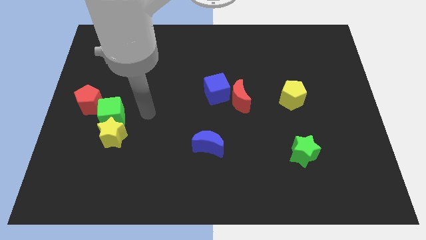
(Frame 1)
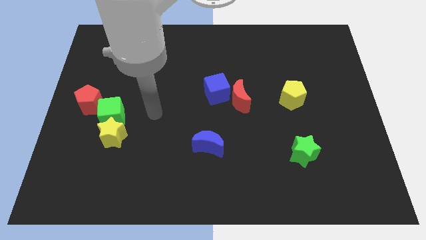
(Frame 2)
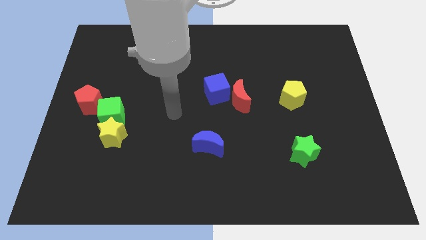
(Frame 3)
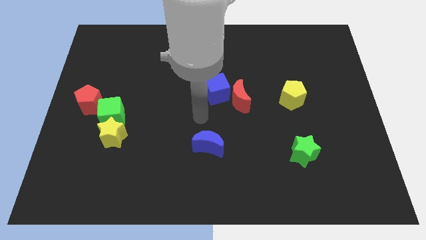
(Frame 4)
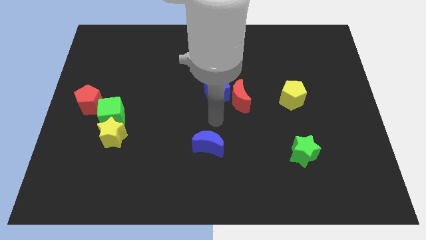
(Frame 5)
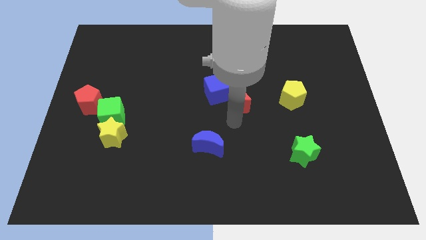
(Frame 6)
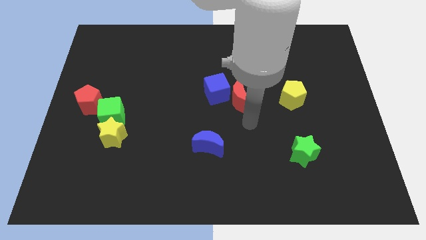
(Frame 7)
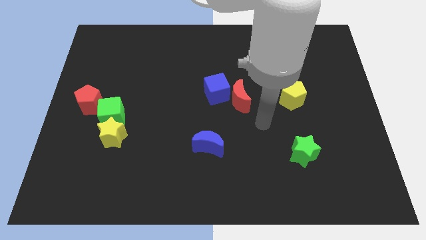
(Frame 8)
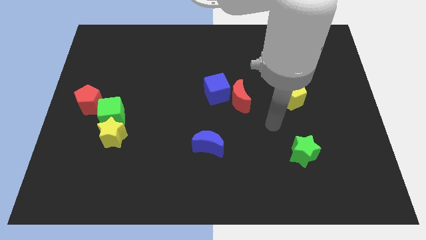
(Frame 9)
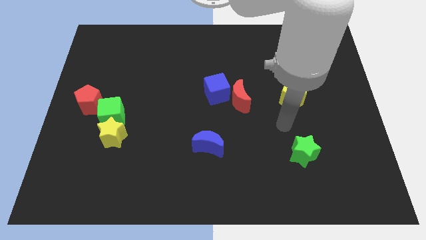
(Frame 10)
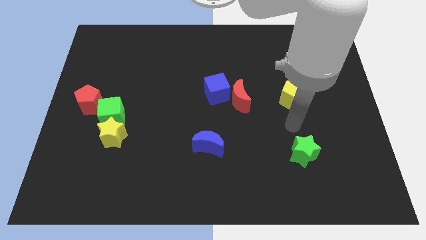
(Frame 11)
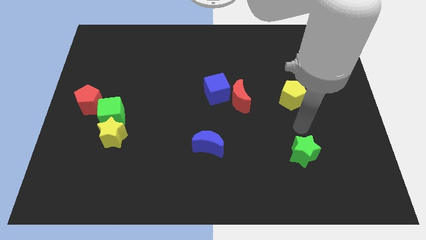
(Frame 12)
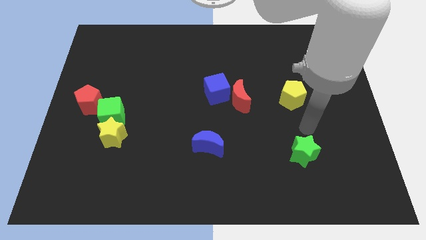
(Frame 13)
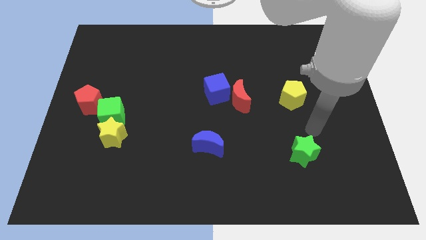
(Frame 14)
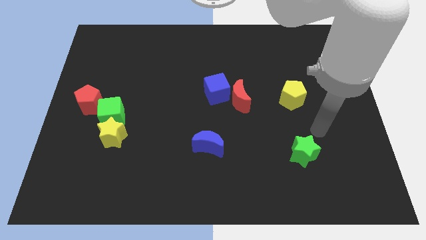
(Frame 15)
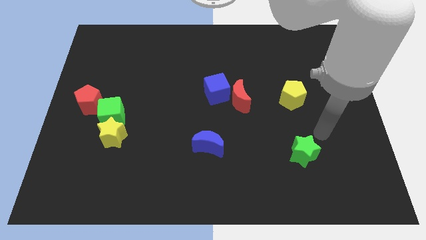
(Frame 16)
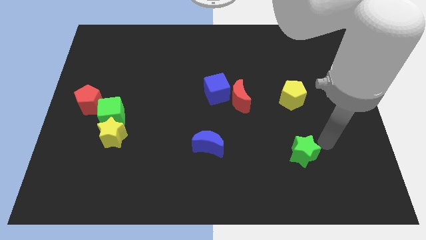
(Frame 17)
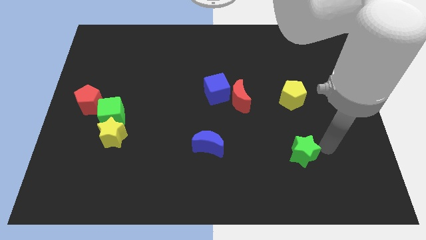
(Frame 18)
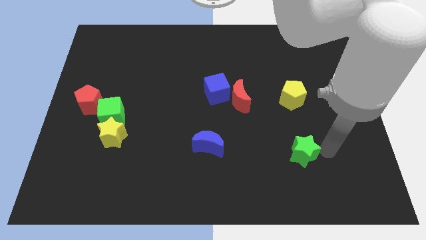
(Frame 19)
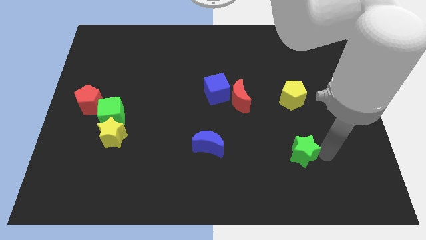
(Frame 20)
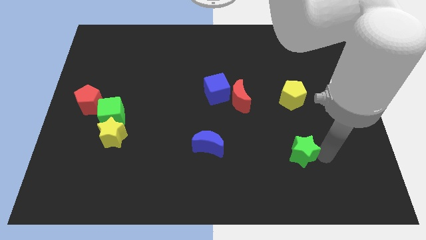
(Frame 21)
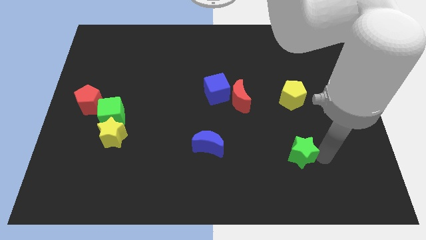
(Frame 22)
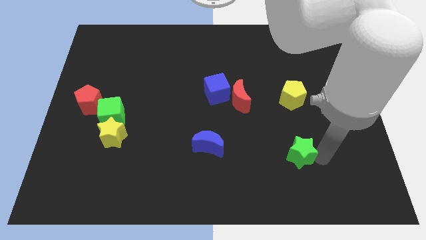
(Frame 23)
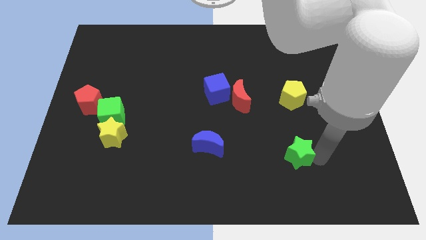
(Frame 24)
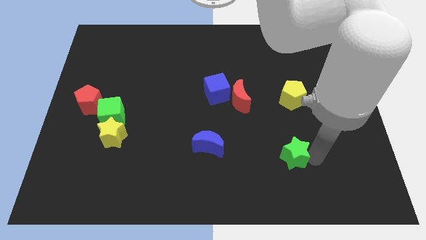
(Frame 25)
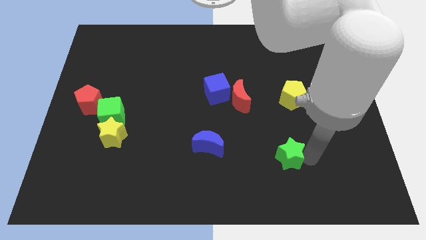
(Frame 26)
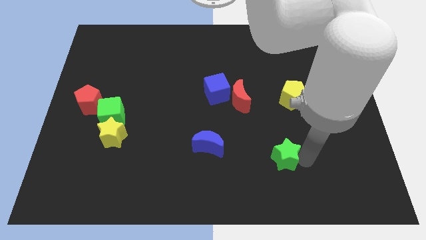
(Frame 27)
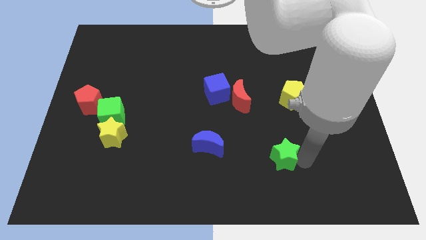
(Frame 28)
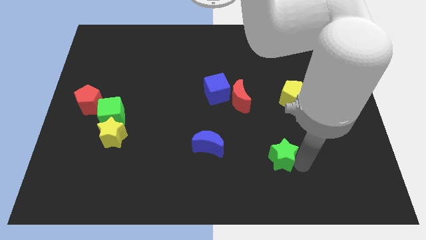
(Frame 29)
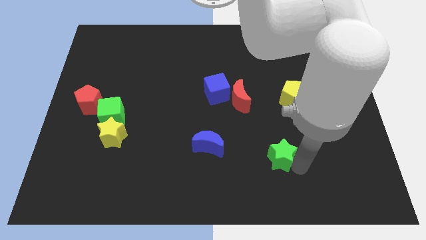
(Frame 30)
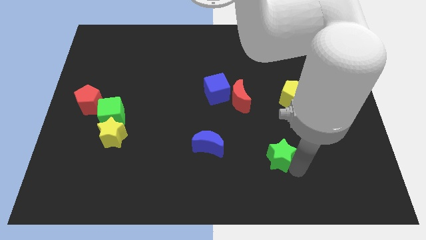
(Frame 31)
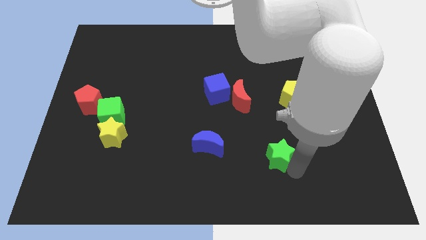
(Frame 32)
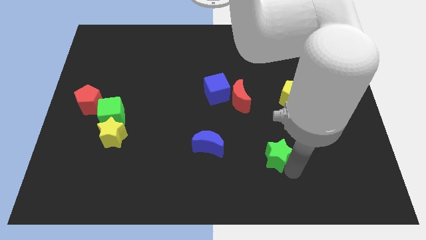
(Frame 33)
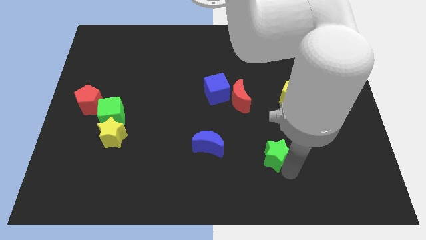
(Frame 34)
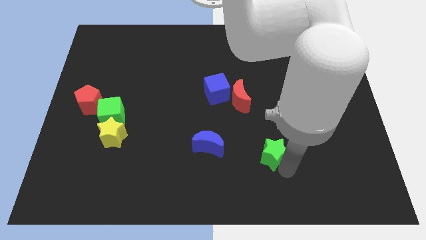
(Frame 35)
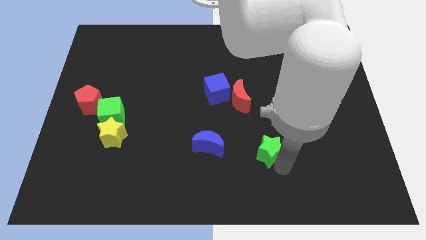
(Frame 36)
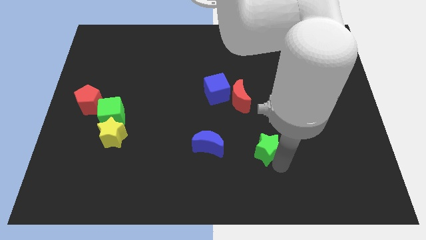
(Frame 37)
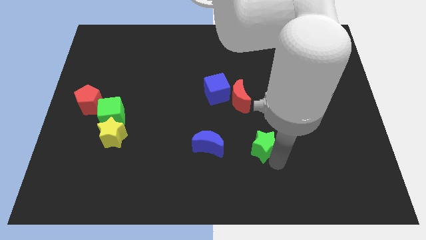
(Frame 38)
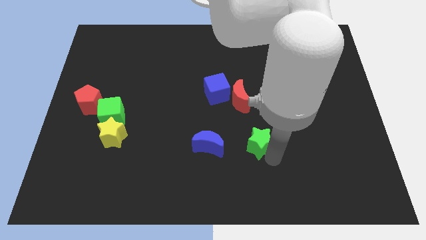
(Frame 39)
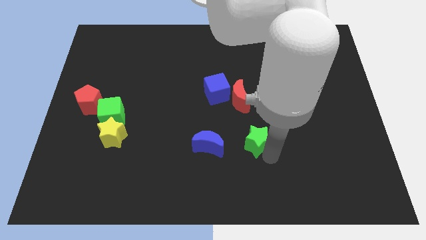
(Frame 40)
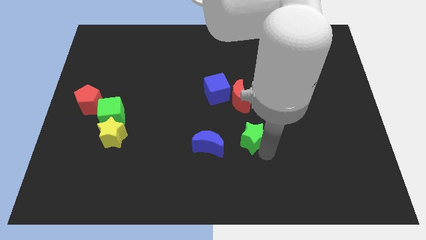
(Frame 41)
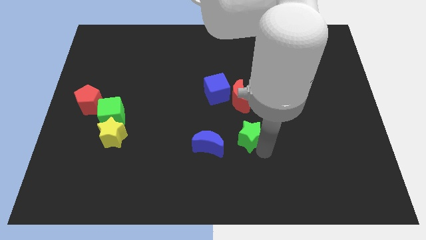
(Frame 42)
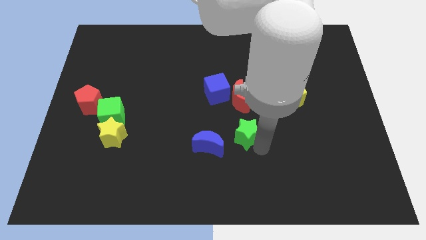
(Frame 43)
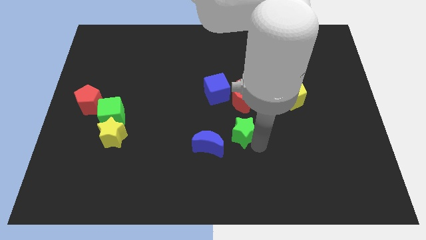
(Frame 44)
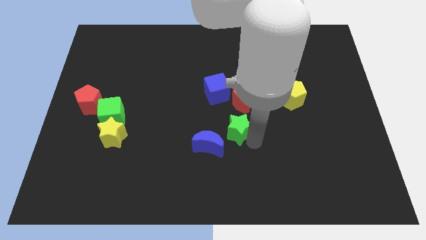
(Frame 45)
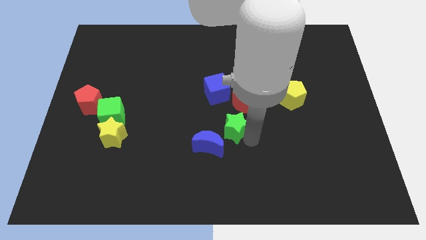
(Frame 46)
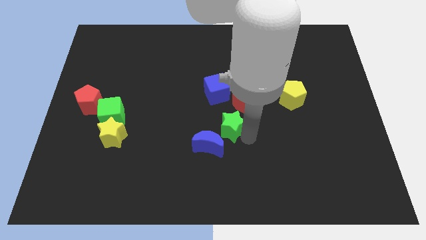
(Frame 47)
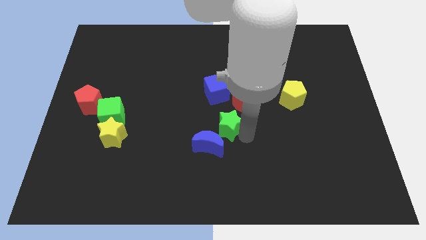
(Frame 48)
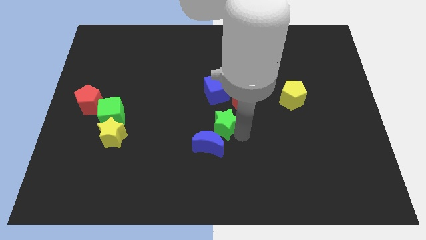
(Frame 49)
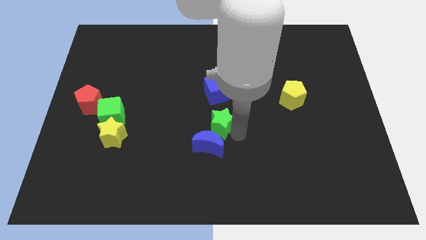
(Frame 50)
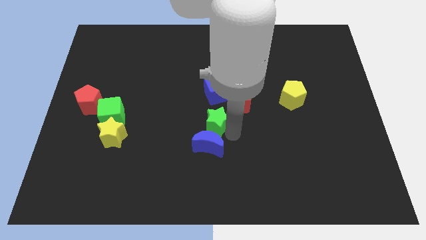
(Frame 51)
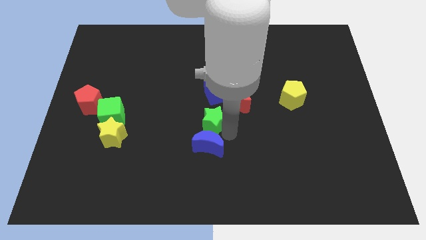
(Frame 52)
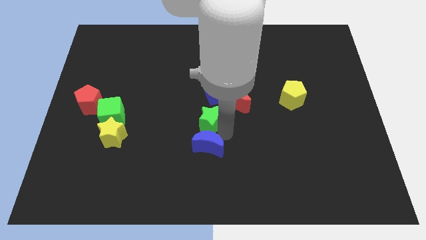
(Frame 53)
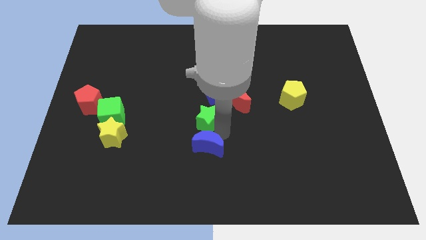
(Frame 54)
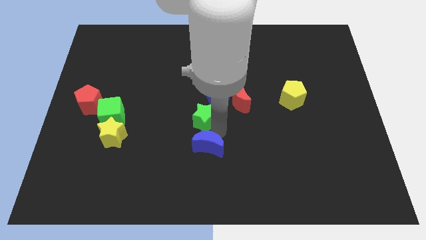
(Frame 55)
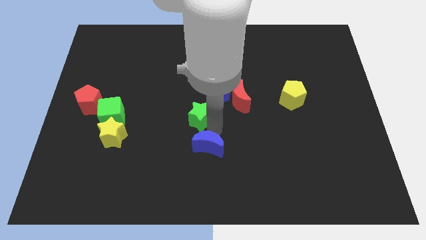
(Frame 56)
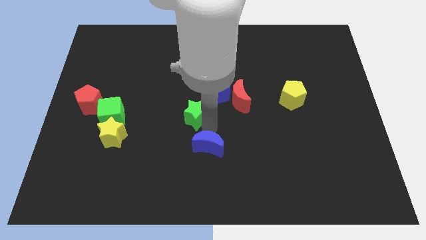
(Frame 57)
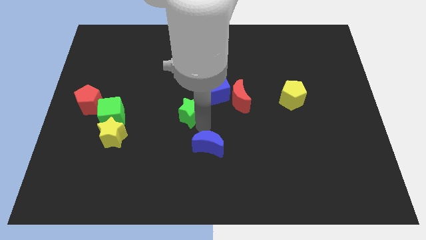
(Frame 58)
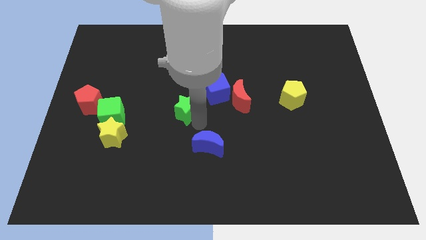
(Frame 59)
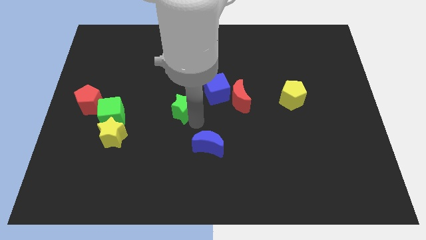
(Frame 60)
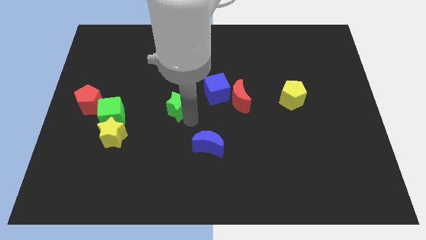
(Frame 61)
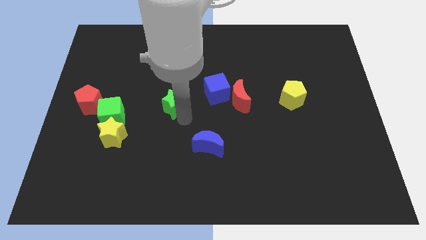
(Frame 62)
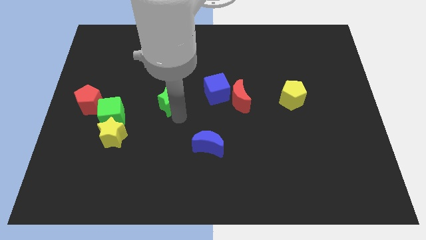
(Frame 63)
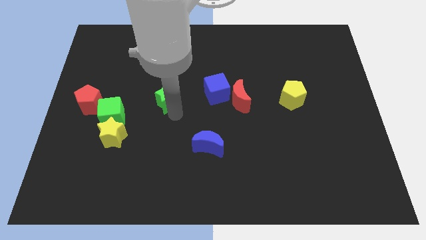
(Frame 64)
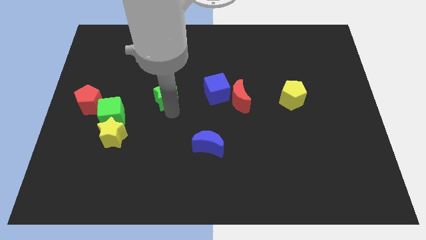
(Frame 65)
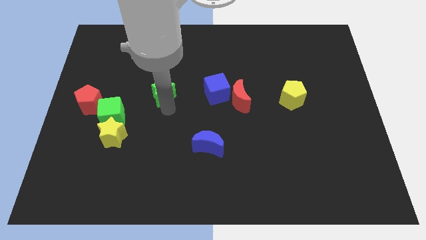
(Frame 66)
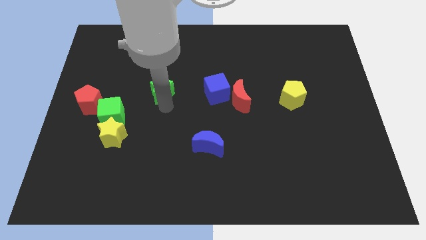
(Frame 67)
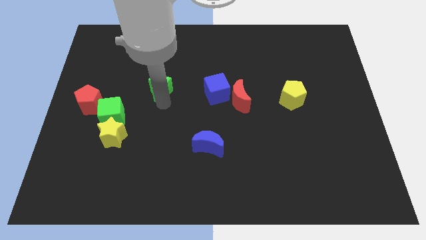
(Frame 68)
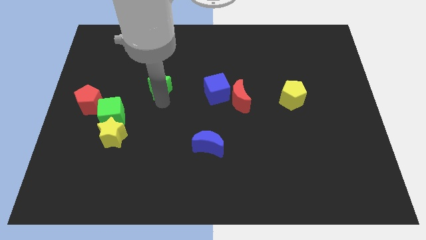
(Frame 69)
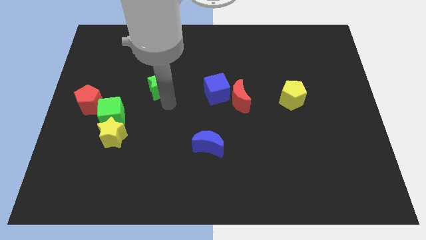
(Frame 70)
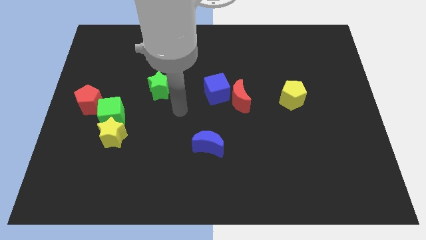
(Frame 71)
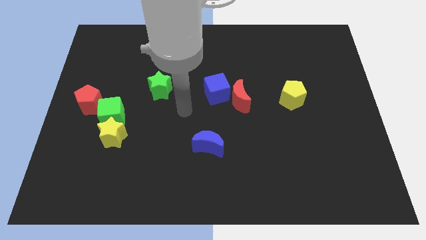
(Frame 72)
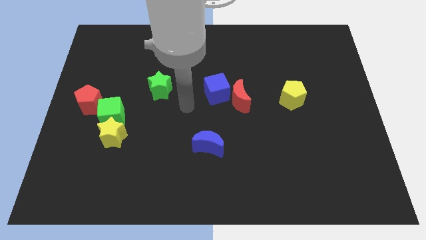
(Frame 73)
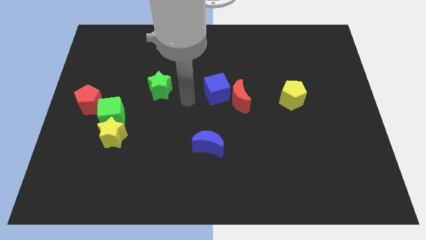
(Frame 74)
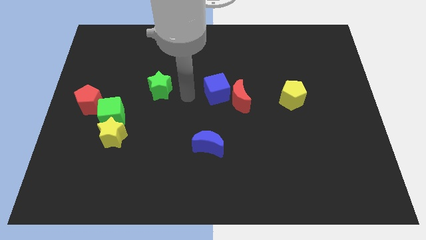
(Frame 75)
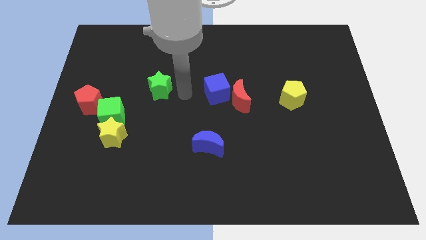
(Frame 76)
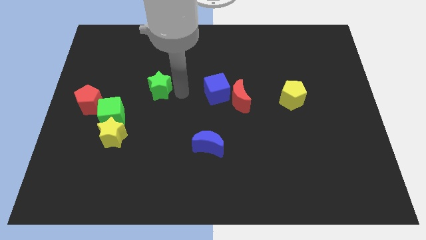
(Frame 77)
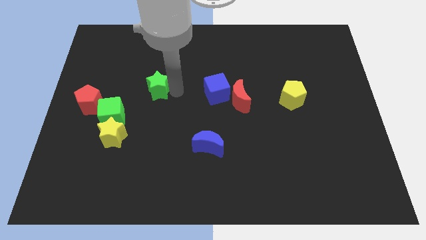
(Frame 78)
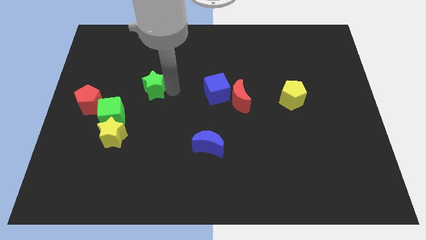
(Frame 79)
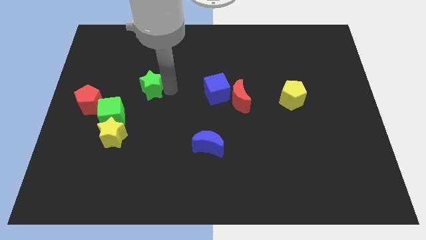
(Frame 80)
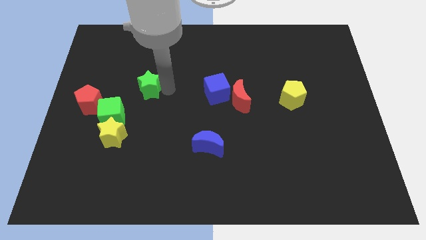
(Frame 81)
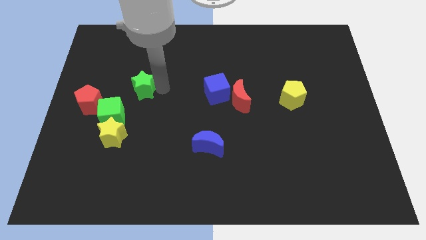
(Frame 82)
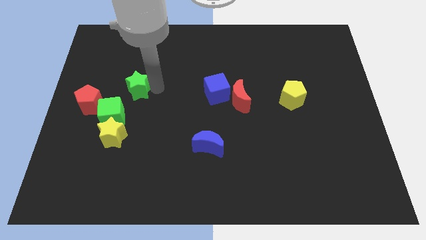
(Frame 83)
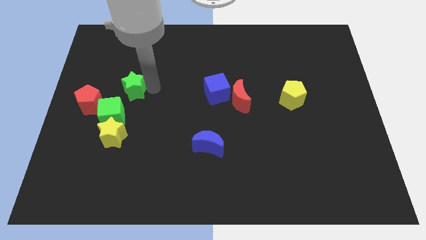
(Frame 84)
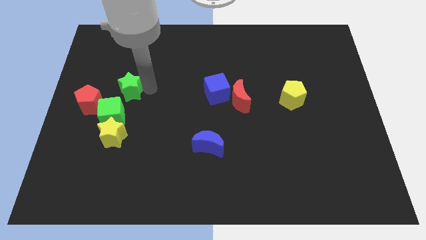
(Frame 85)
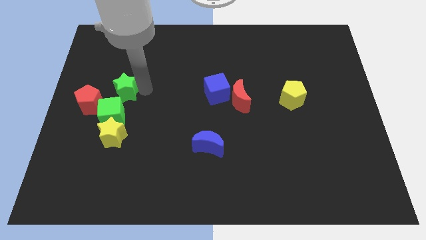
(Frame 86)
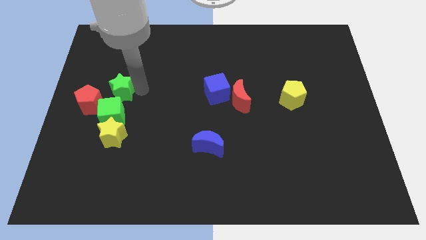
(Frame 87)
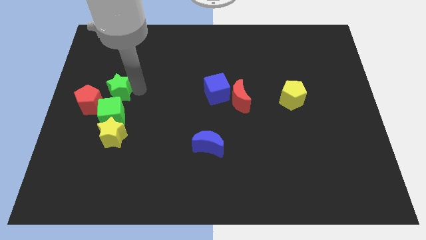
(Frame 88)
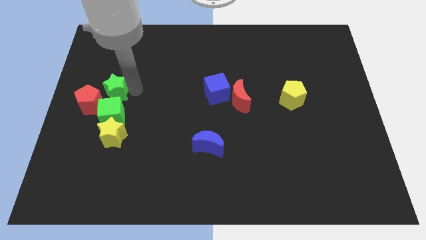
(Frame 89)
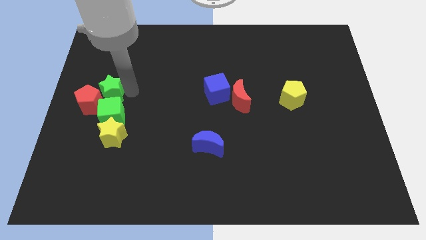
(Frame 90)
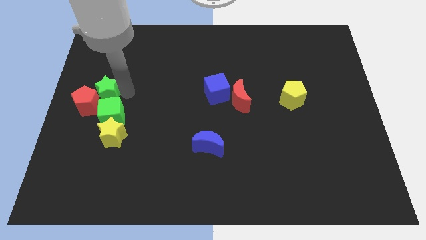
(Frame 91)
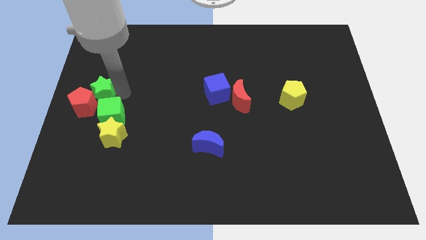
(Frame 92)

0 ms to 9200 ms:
slide the green star close to the red pentagon
